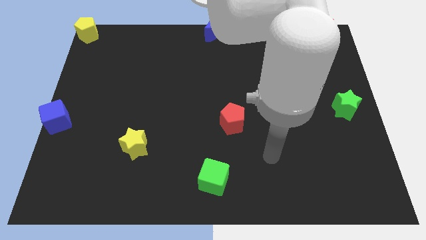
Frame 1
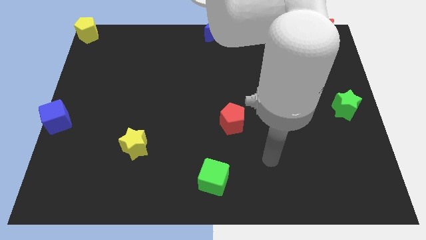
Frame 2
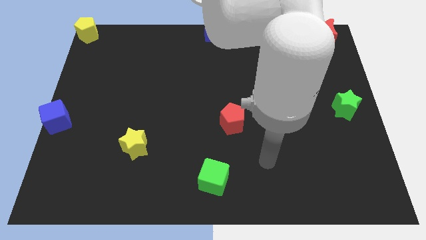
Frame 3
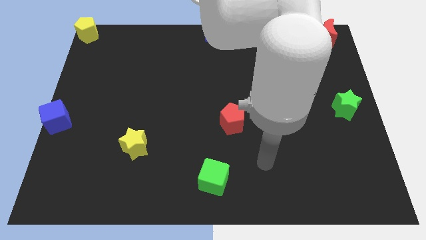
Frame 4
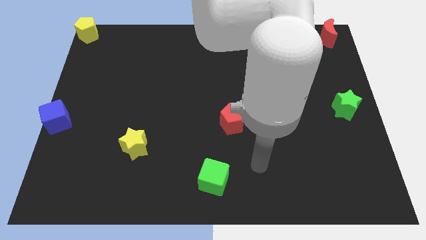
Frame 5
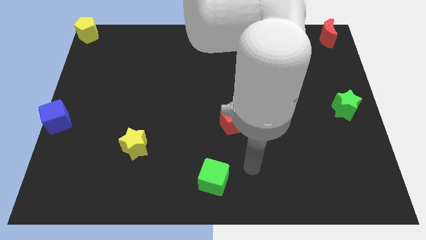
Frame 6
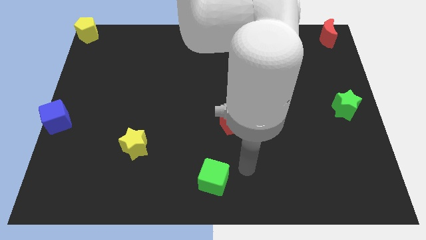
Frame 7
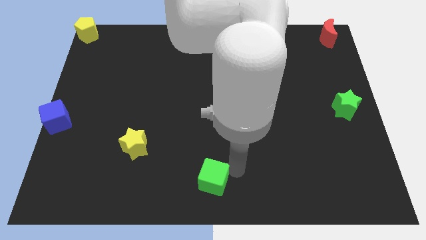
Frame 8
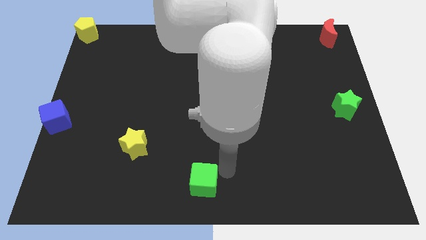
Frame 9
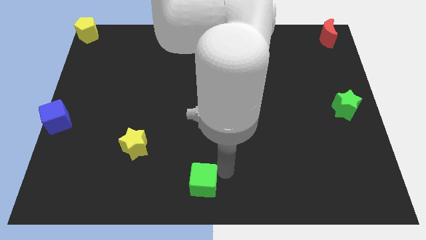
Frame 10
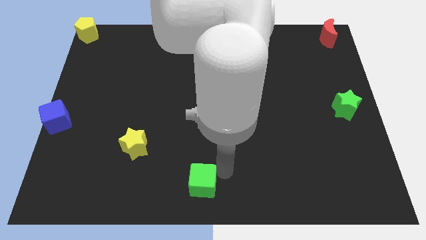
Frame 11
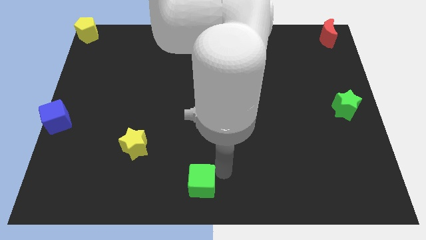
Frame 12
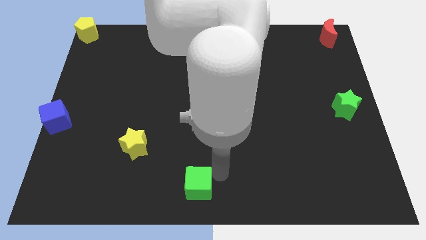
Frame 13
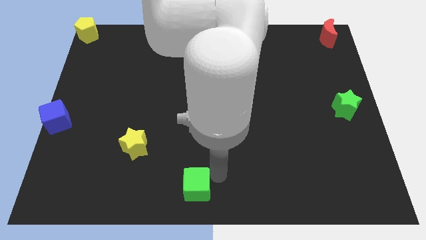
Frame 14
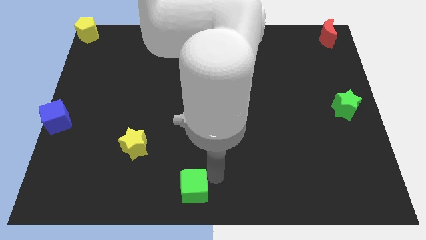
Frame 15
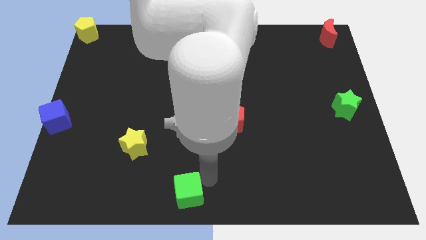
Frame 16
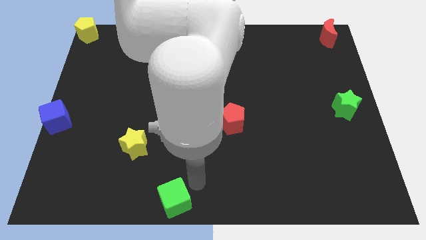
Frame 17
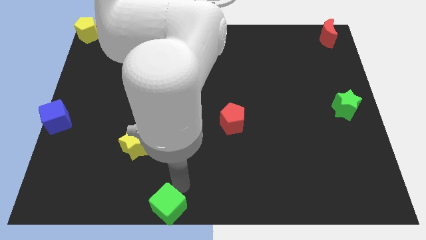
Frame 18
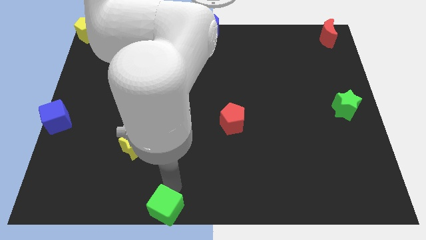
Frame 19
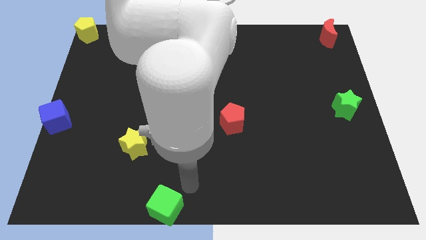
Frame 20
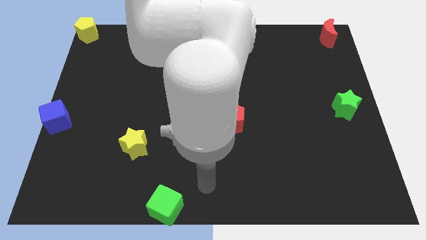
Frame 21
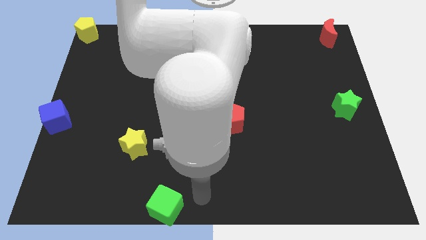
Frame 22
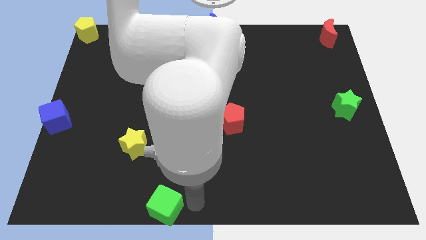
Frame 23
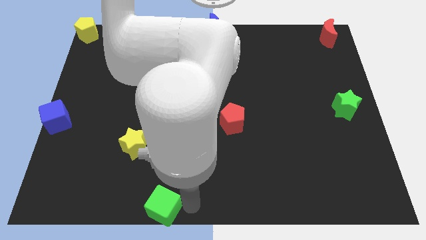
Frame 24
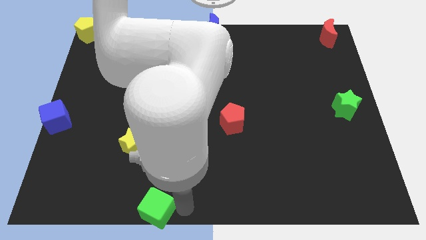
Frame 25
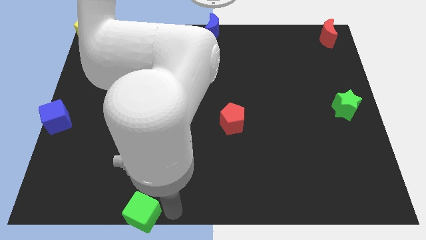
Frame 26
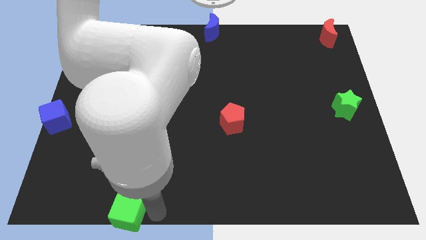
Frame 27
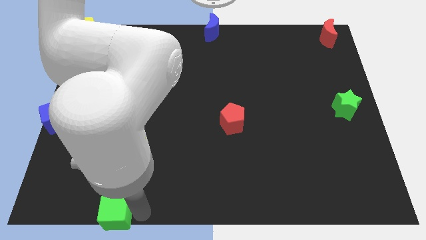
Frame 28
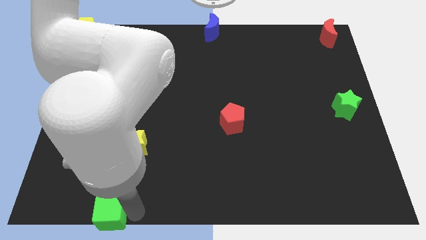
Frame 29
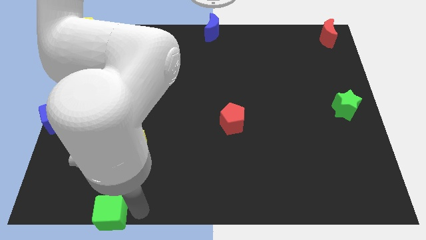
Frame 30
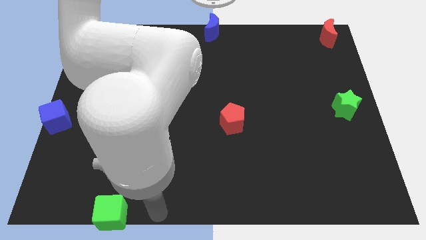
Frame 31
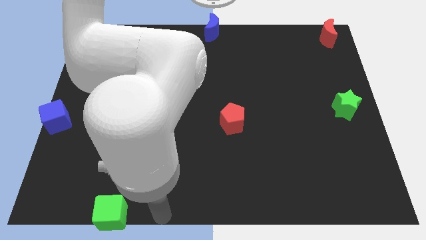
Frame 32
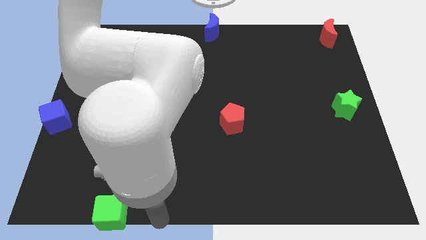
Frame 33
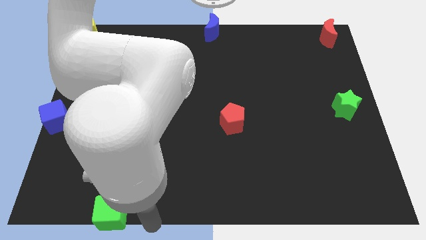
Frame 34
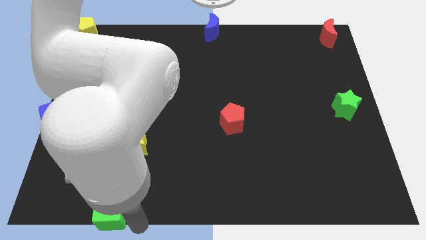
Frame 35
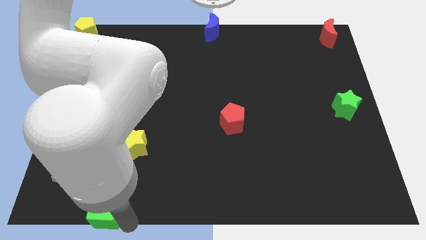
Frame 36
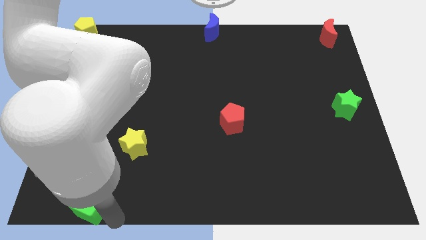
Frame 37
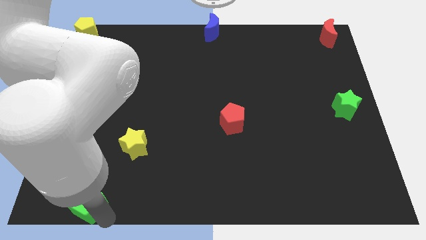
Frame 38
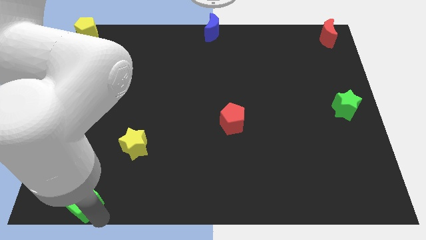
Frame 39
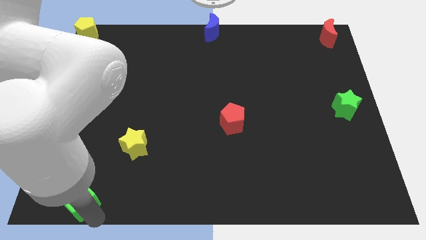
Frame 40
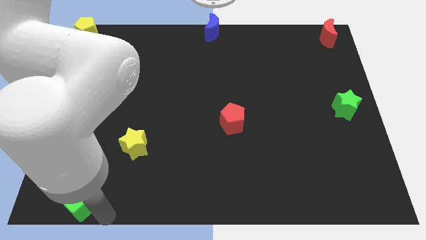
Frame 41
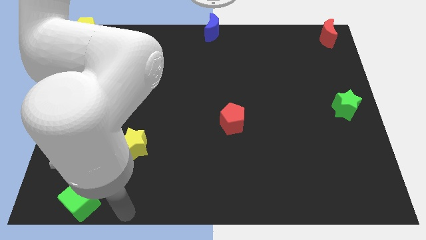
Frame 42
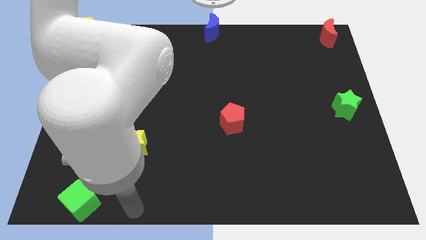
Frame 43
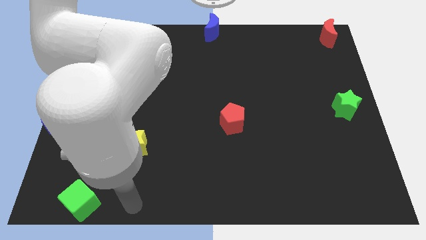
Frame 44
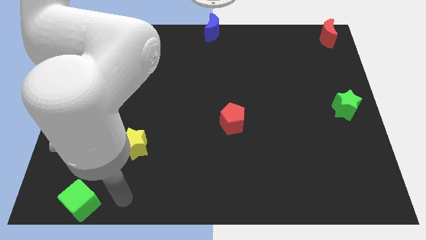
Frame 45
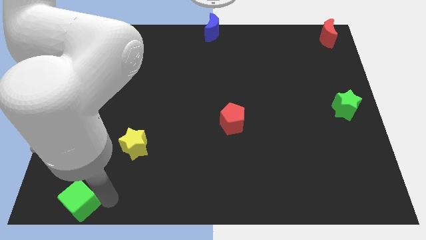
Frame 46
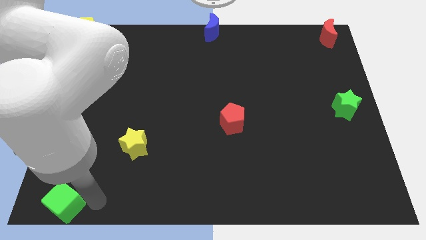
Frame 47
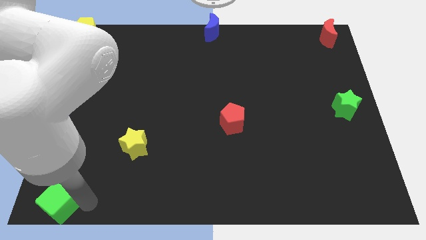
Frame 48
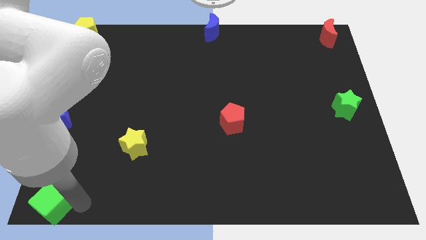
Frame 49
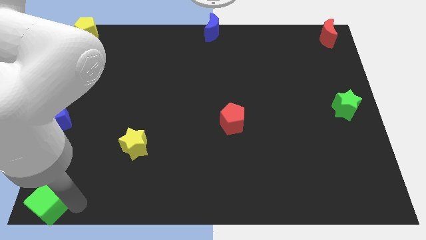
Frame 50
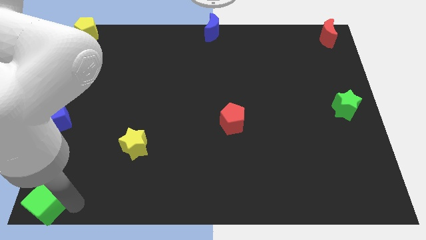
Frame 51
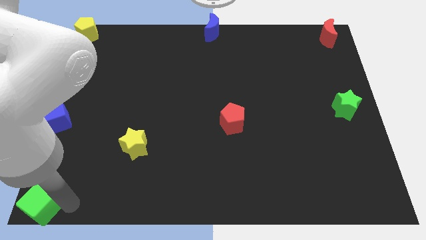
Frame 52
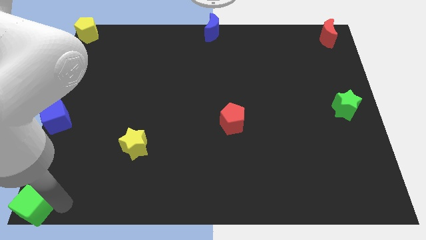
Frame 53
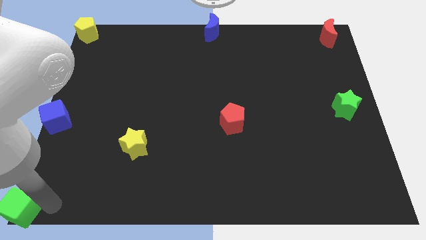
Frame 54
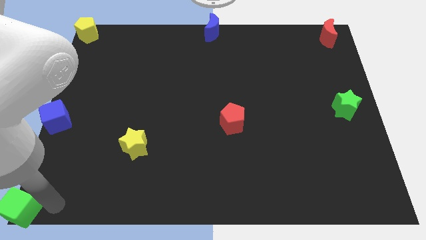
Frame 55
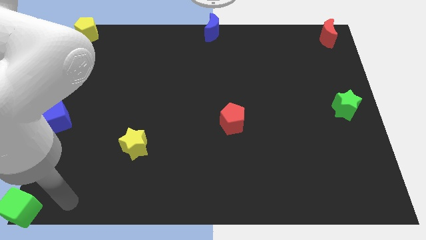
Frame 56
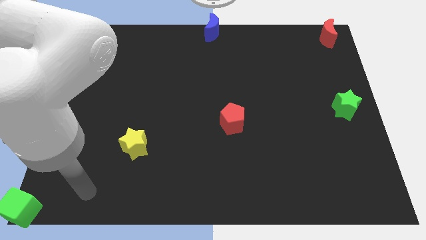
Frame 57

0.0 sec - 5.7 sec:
move the green cube to the bottom left corner of the board

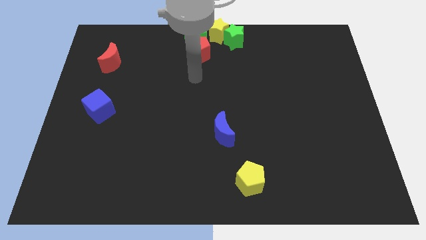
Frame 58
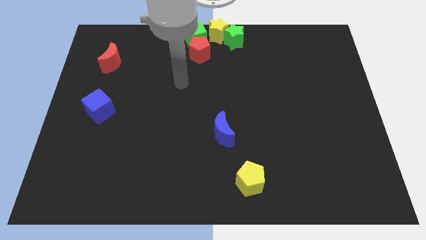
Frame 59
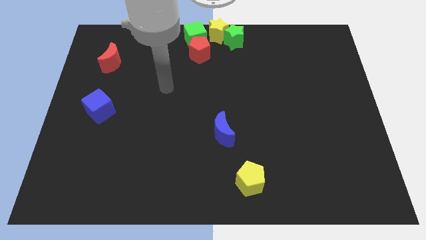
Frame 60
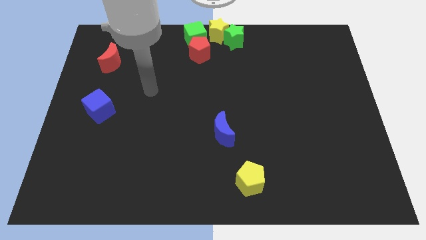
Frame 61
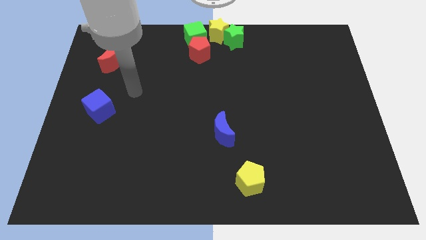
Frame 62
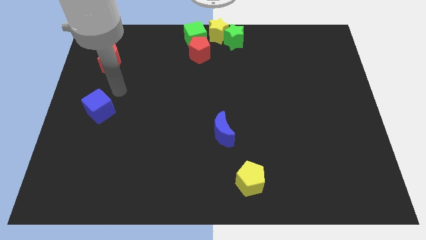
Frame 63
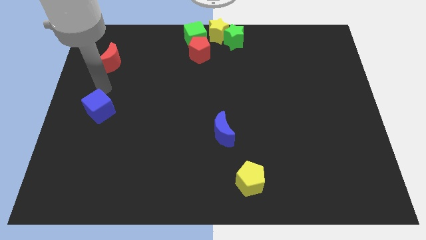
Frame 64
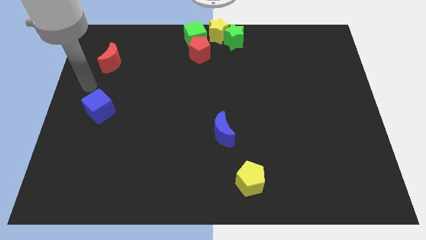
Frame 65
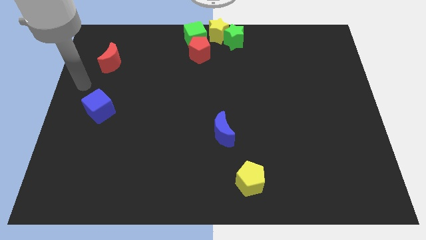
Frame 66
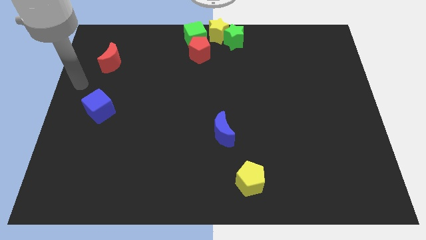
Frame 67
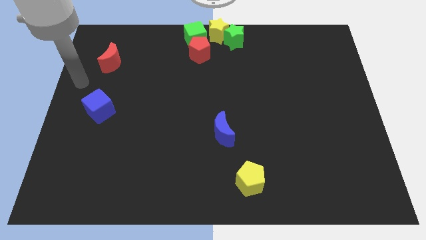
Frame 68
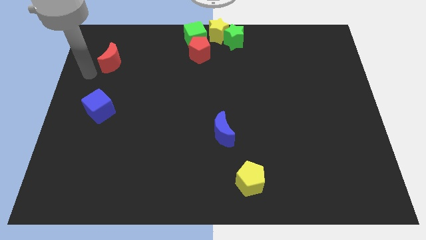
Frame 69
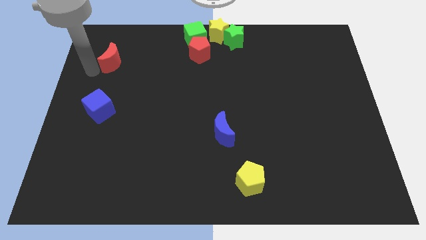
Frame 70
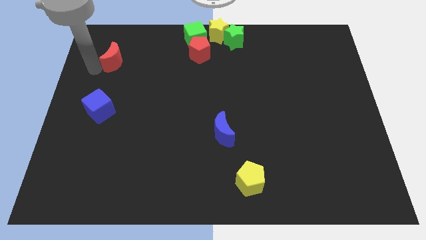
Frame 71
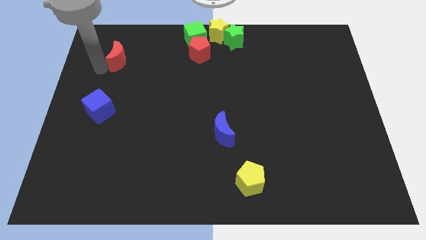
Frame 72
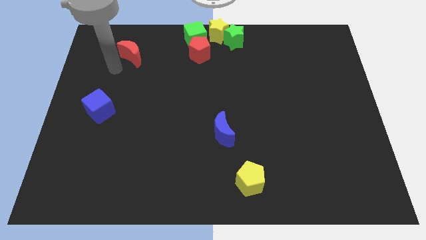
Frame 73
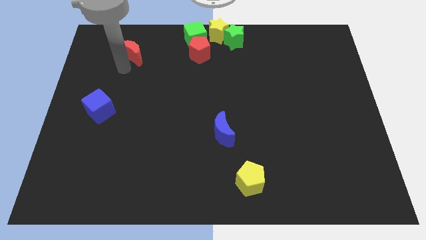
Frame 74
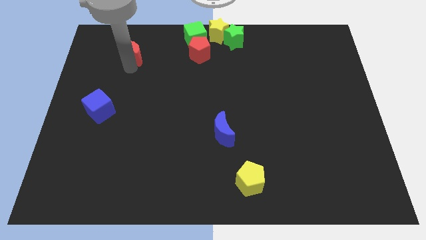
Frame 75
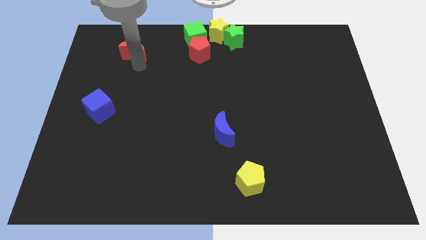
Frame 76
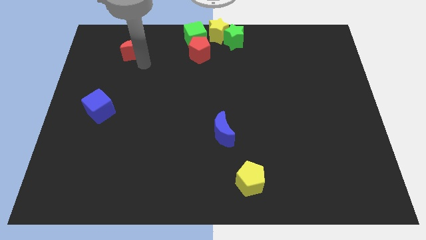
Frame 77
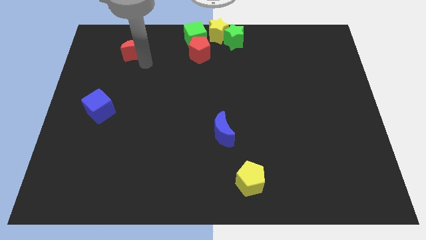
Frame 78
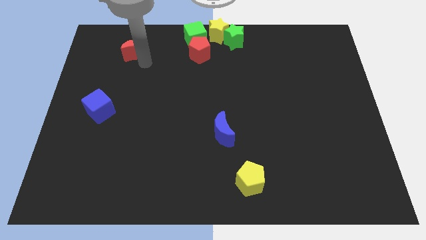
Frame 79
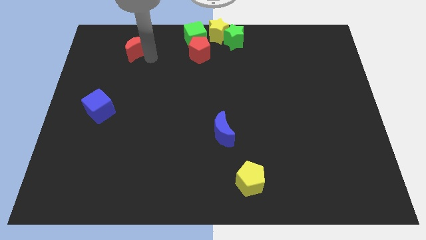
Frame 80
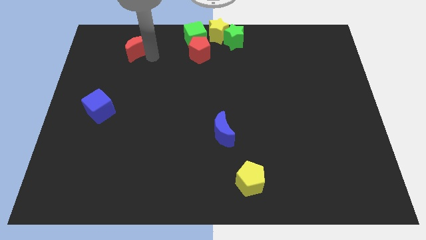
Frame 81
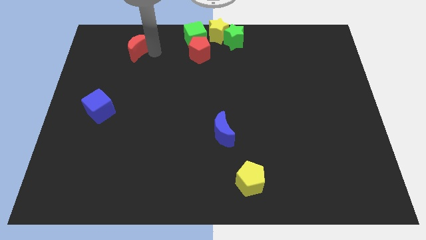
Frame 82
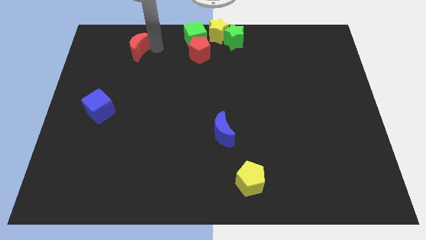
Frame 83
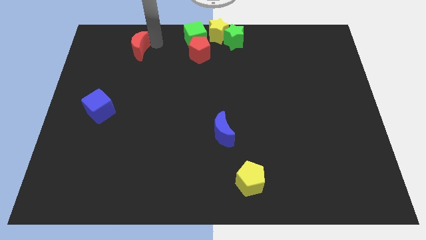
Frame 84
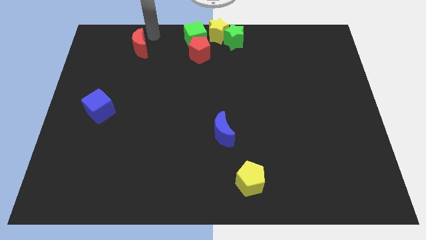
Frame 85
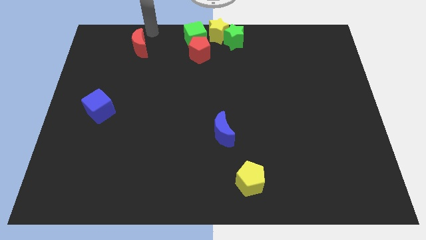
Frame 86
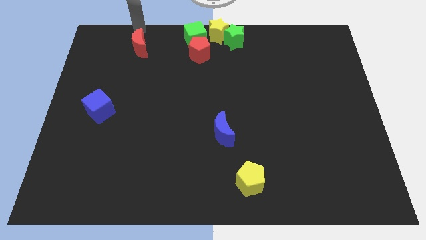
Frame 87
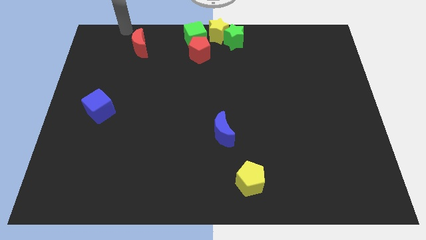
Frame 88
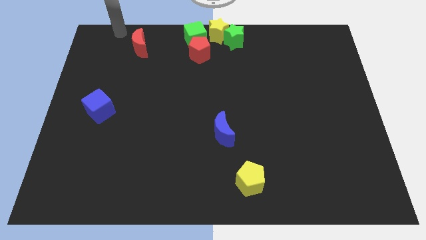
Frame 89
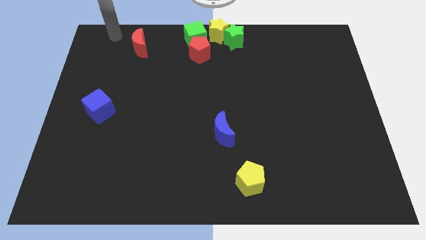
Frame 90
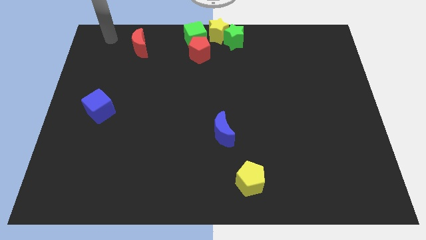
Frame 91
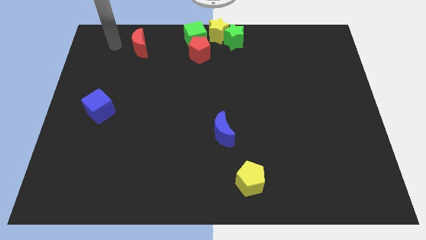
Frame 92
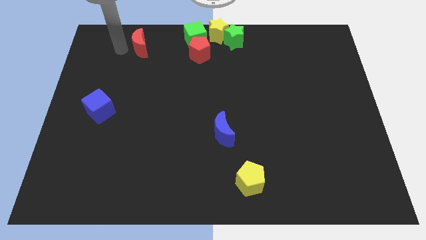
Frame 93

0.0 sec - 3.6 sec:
push the red crescent to the right of the board
